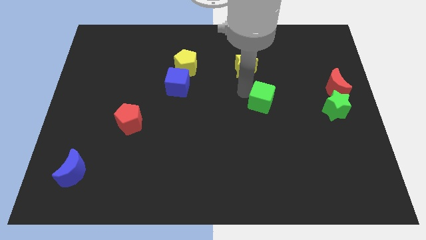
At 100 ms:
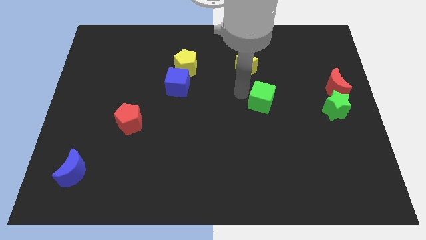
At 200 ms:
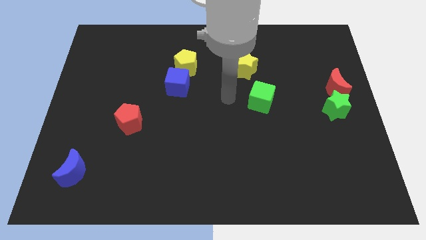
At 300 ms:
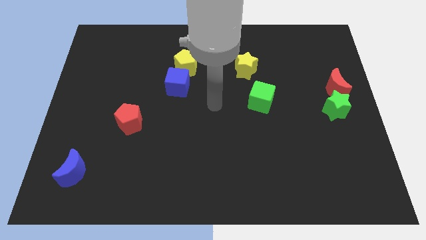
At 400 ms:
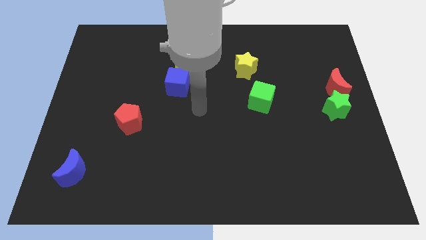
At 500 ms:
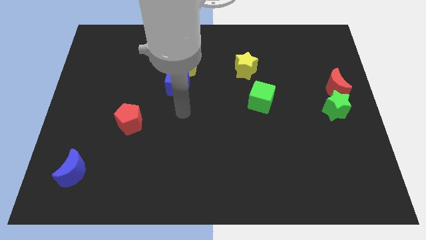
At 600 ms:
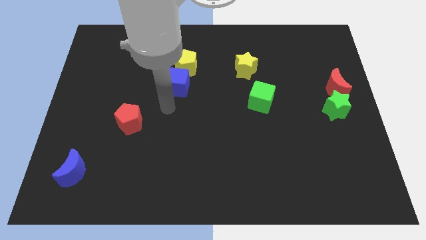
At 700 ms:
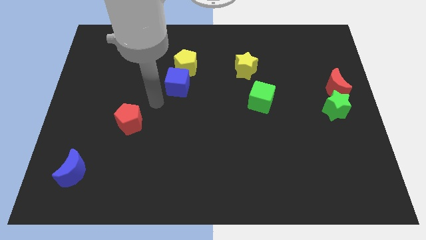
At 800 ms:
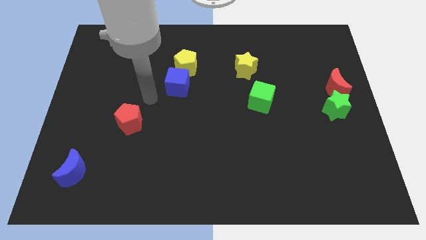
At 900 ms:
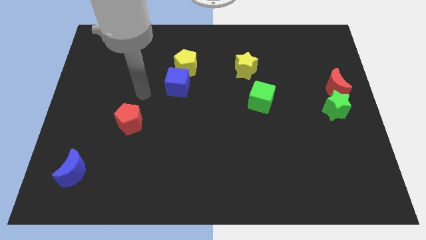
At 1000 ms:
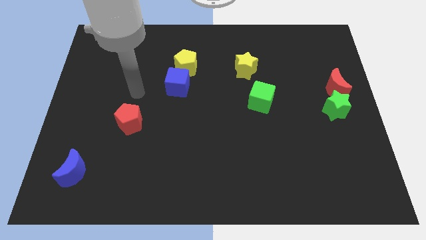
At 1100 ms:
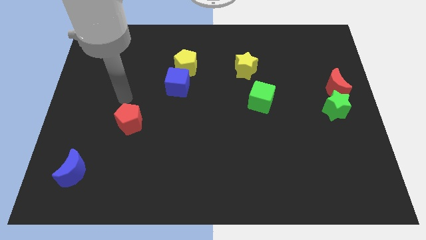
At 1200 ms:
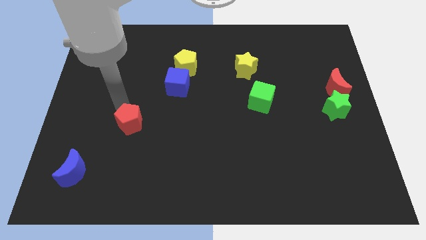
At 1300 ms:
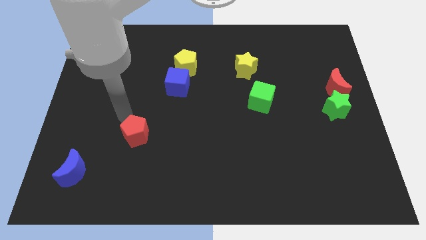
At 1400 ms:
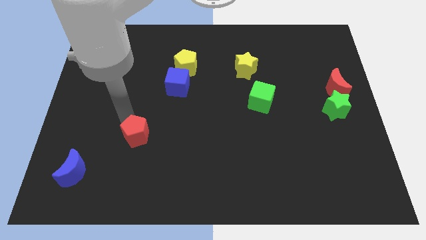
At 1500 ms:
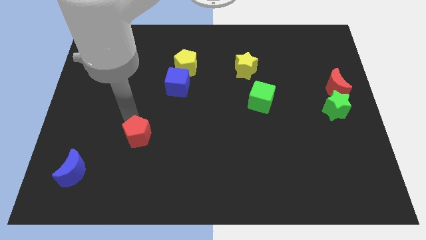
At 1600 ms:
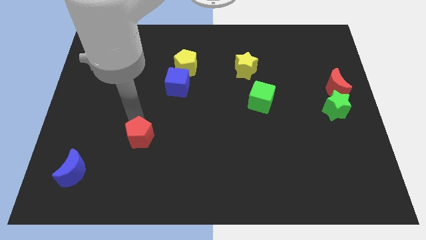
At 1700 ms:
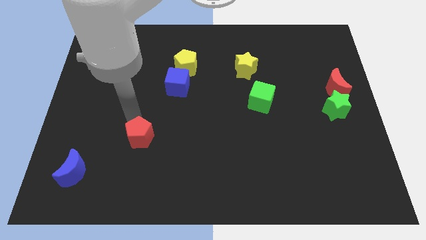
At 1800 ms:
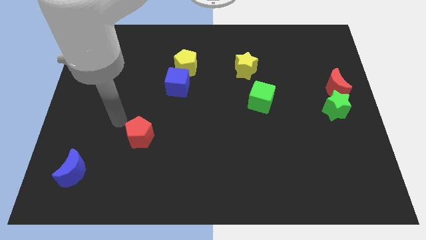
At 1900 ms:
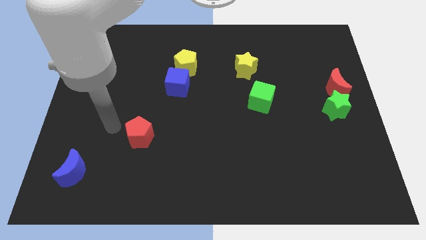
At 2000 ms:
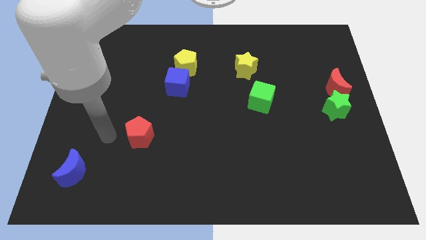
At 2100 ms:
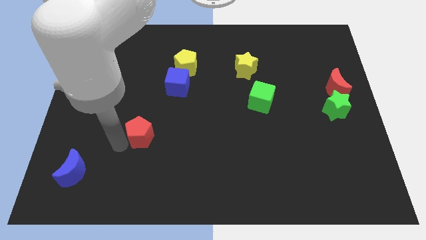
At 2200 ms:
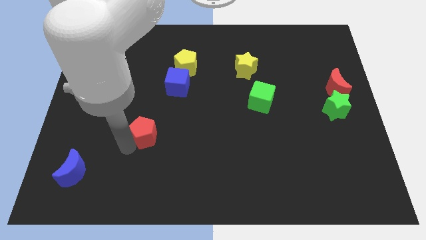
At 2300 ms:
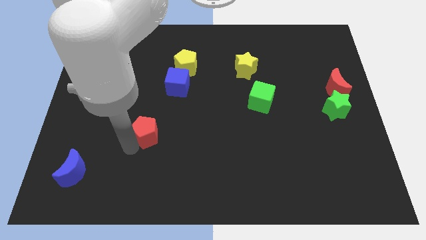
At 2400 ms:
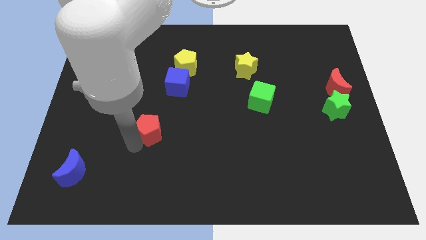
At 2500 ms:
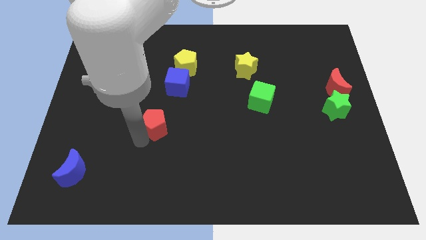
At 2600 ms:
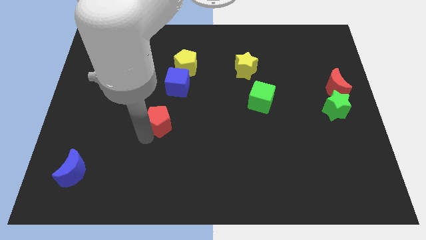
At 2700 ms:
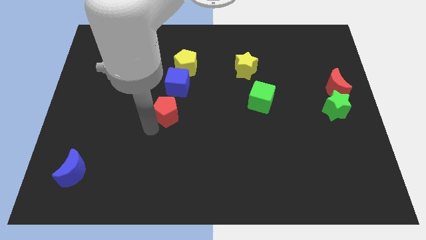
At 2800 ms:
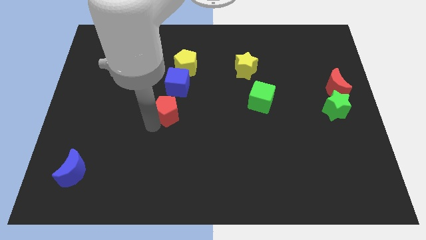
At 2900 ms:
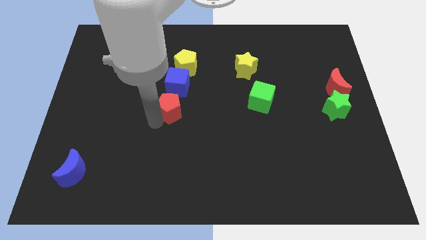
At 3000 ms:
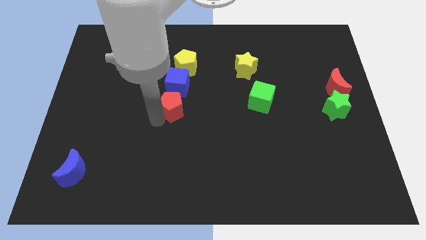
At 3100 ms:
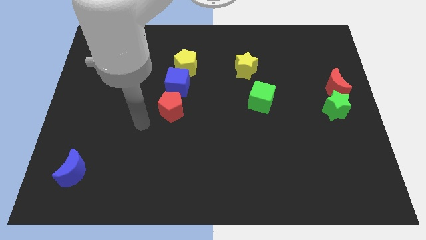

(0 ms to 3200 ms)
move the arm away from the green cube

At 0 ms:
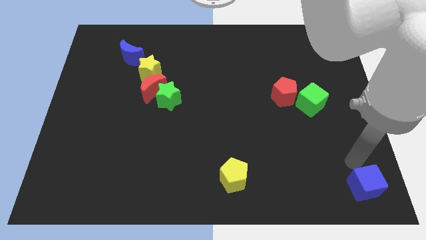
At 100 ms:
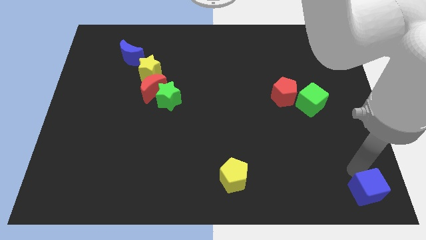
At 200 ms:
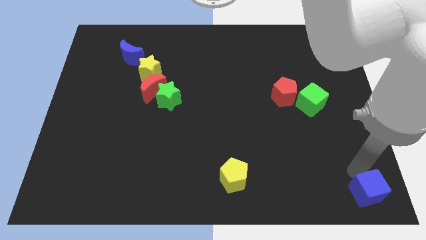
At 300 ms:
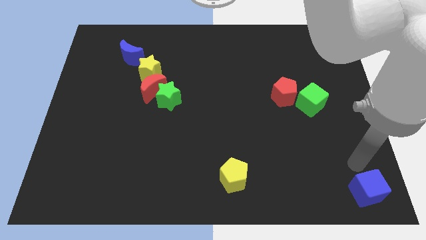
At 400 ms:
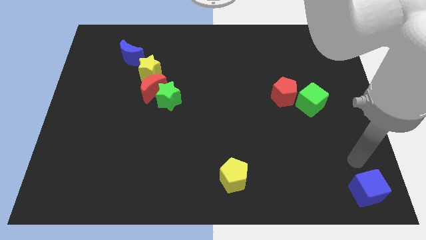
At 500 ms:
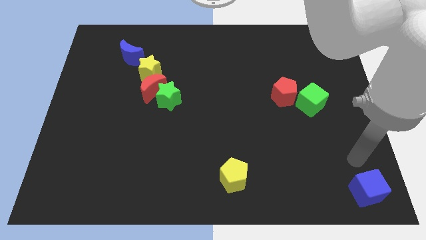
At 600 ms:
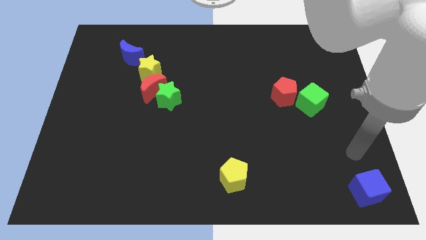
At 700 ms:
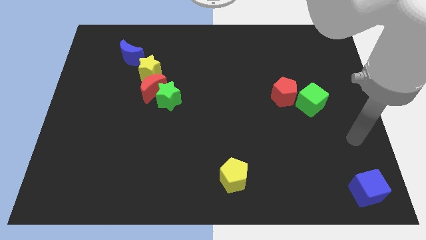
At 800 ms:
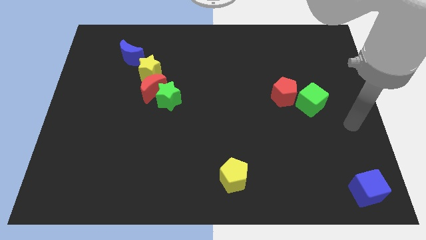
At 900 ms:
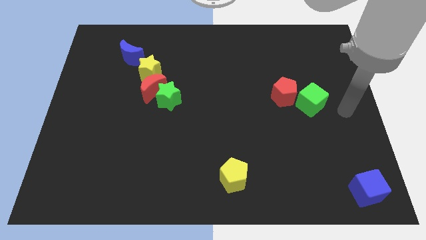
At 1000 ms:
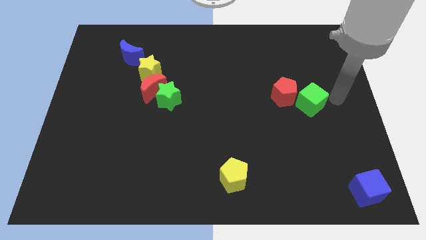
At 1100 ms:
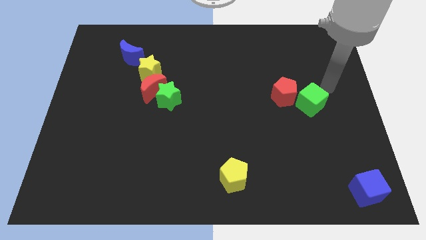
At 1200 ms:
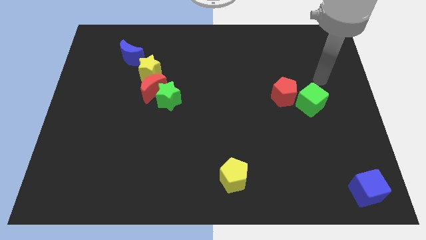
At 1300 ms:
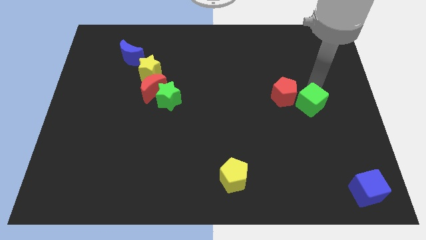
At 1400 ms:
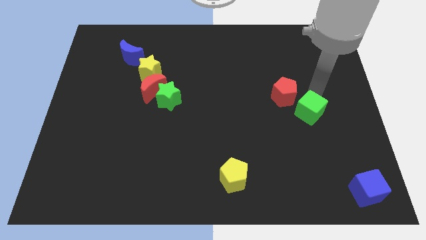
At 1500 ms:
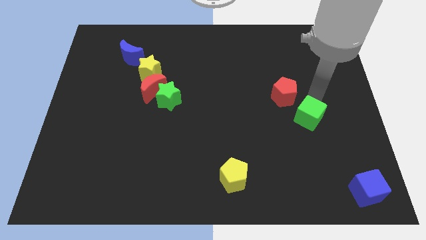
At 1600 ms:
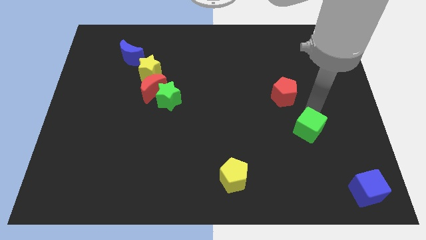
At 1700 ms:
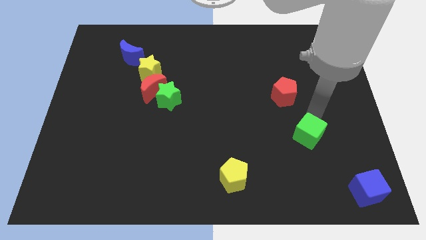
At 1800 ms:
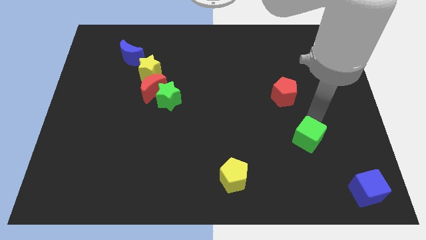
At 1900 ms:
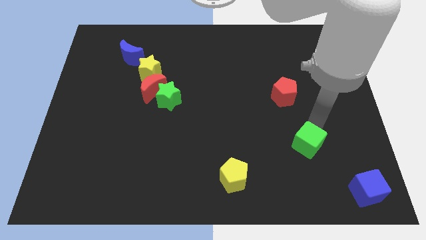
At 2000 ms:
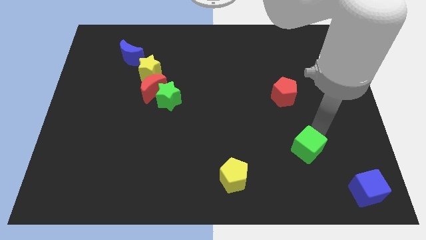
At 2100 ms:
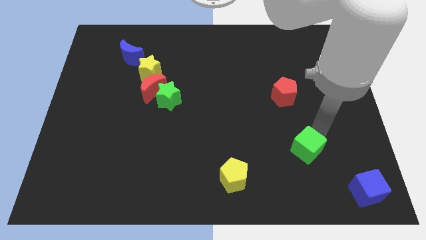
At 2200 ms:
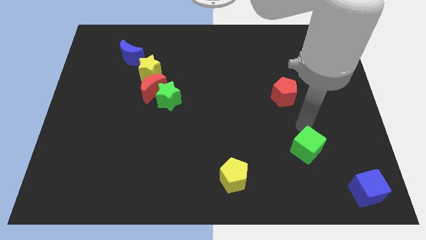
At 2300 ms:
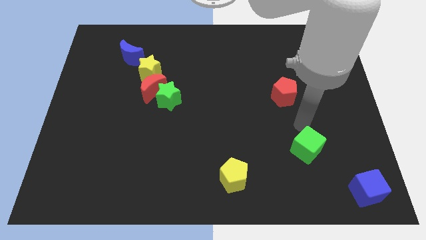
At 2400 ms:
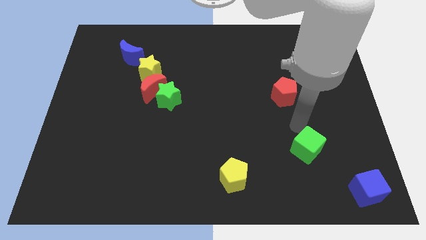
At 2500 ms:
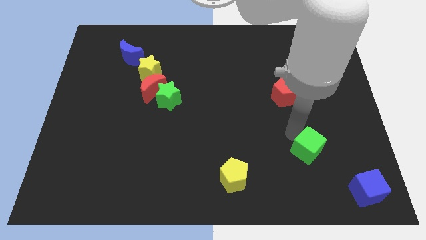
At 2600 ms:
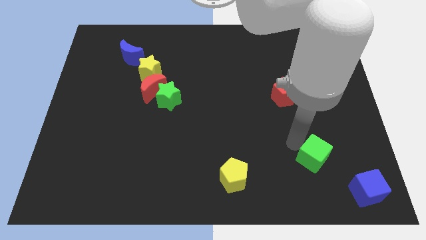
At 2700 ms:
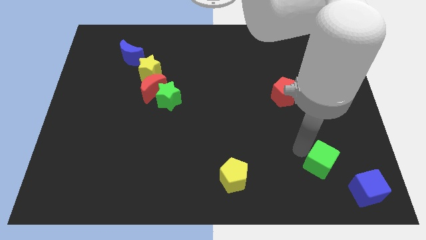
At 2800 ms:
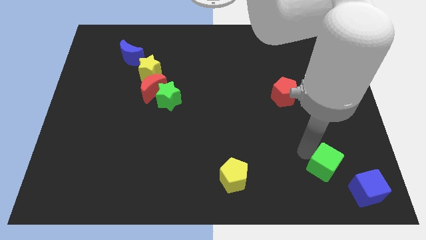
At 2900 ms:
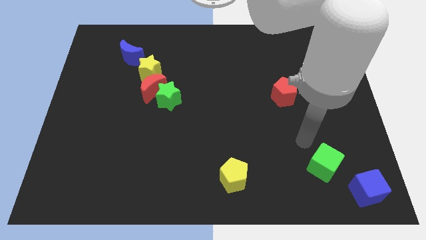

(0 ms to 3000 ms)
place the green cube diagonal to the blue cube

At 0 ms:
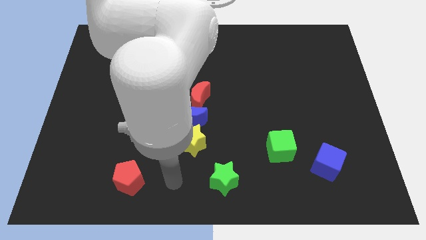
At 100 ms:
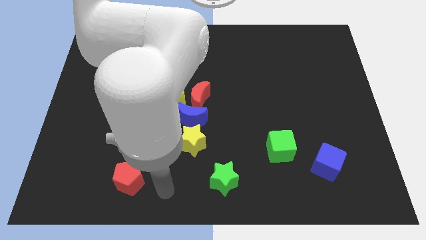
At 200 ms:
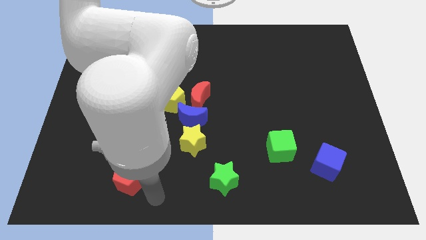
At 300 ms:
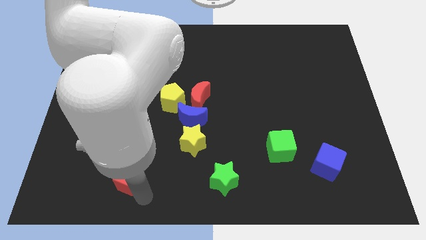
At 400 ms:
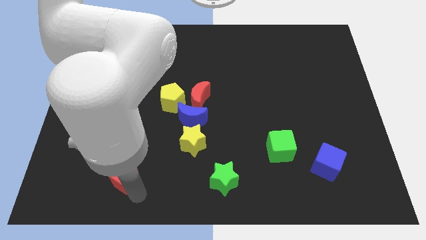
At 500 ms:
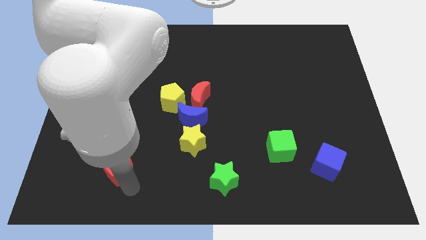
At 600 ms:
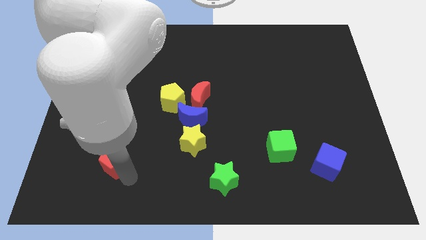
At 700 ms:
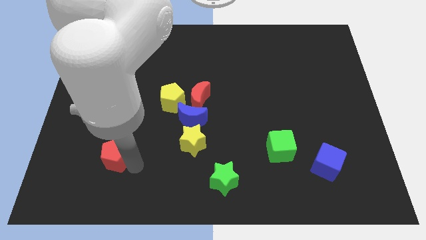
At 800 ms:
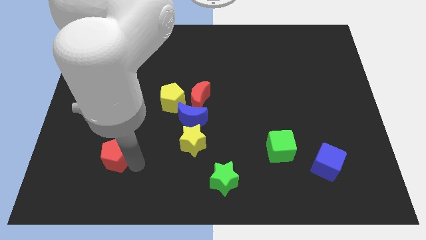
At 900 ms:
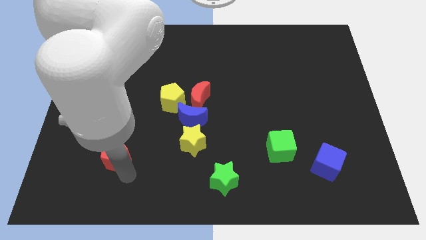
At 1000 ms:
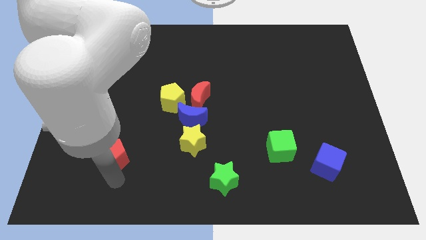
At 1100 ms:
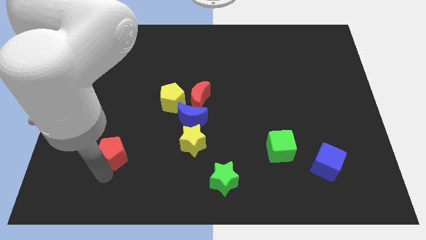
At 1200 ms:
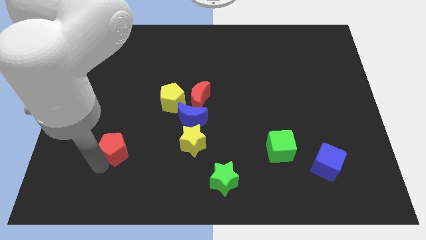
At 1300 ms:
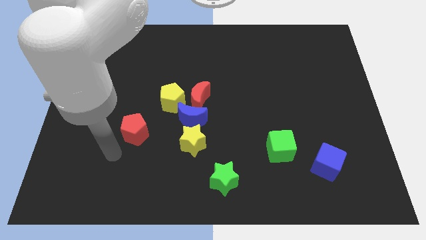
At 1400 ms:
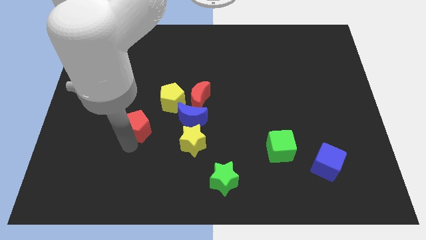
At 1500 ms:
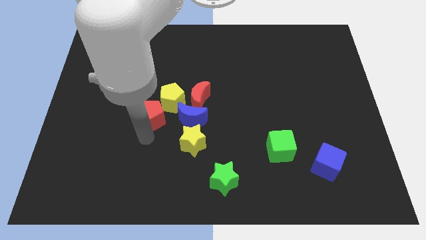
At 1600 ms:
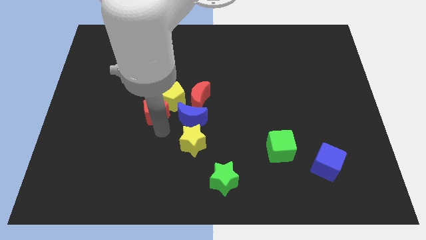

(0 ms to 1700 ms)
push the red pentagon to the right side of the blue moon

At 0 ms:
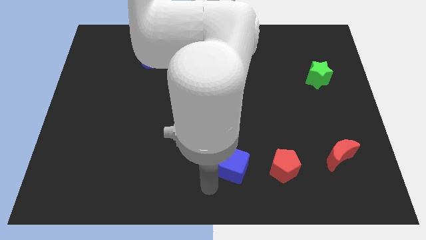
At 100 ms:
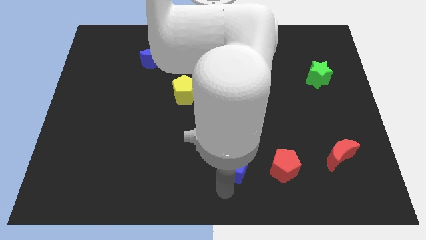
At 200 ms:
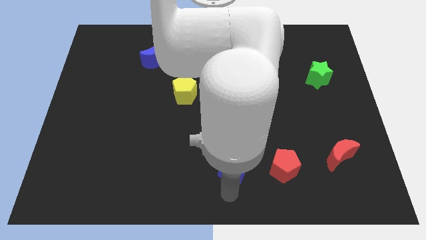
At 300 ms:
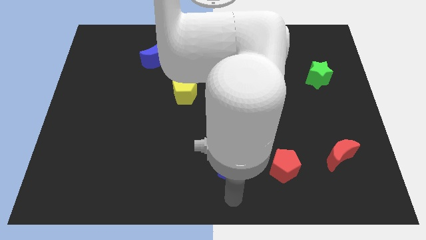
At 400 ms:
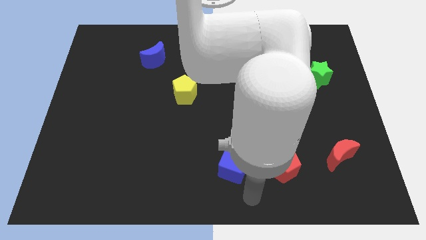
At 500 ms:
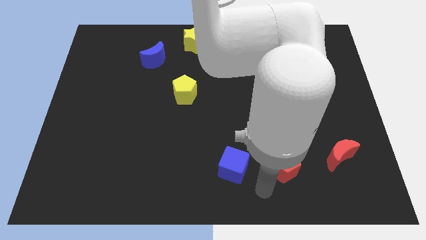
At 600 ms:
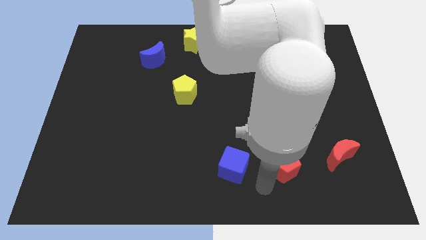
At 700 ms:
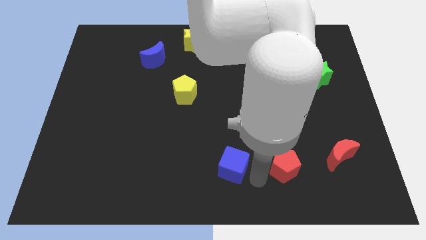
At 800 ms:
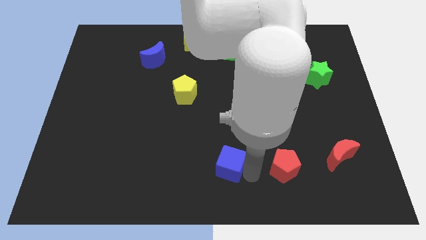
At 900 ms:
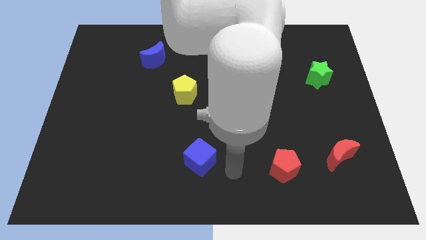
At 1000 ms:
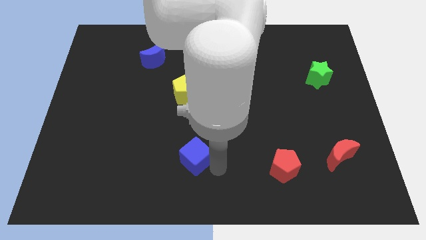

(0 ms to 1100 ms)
place the blue cube vertically below the yellow pentagon
